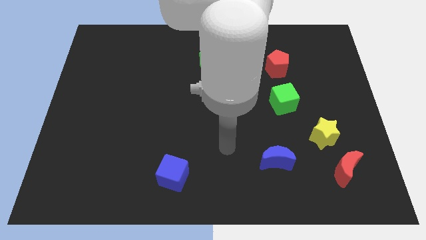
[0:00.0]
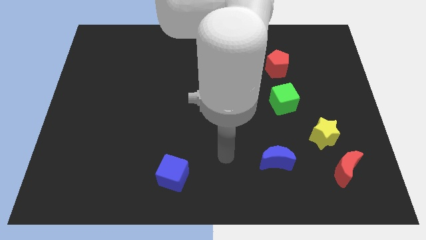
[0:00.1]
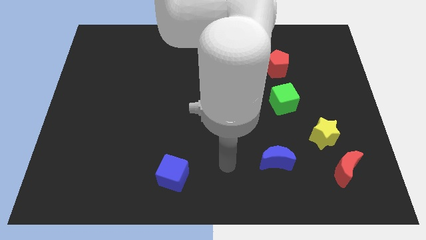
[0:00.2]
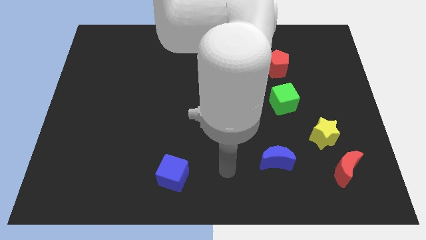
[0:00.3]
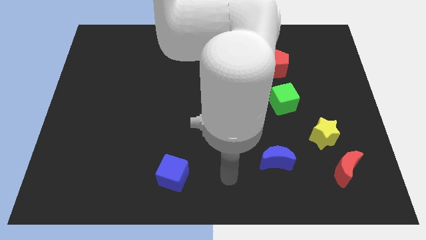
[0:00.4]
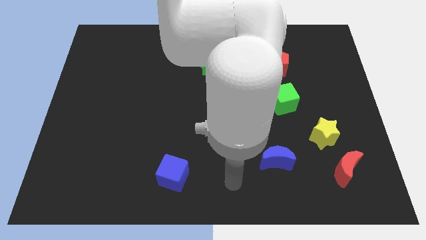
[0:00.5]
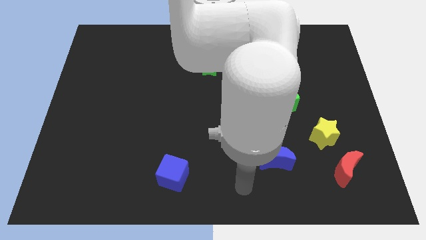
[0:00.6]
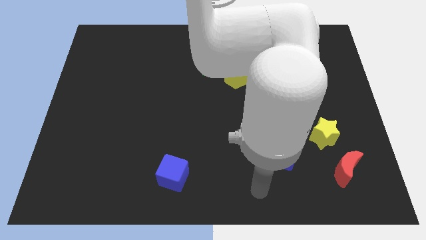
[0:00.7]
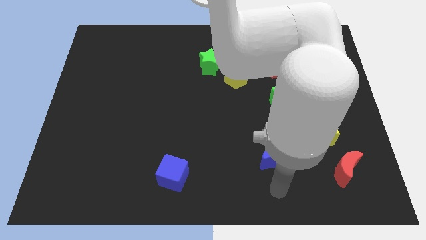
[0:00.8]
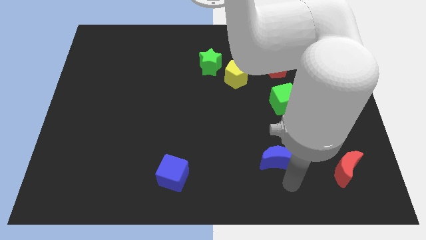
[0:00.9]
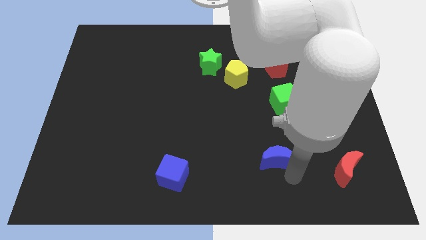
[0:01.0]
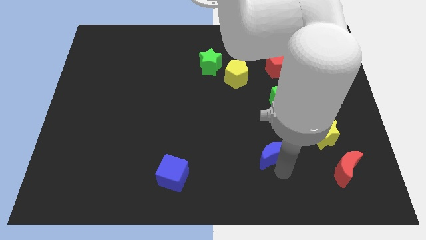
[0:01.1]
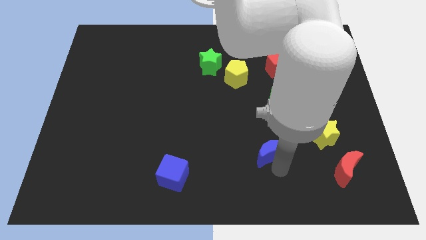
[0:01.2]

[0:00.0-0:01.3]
touch the blue moon

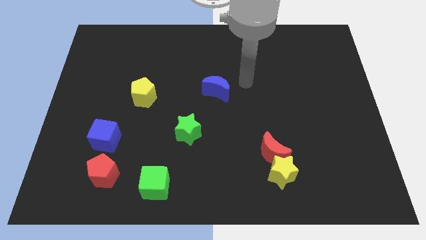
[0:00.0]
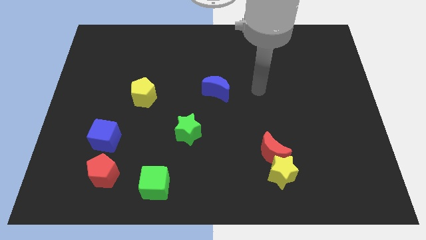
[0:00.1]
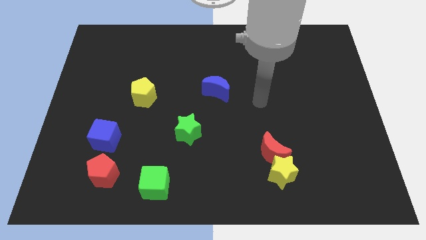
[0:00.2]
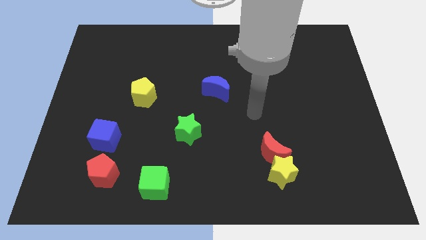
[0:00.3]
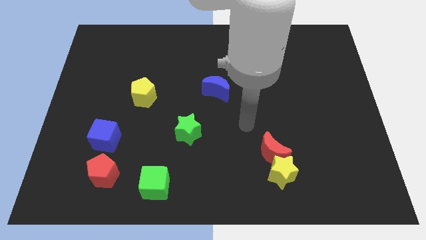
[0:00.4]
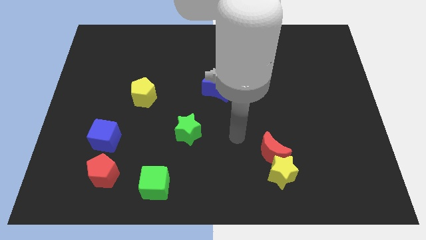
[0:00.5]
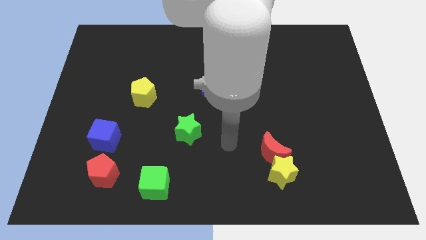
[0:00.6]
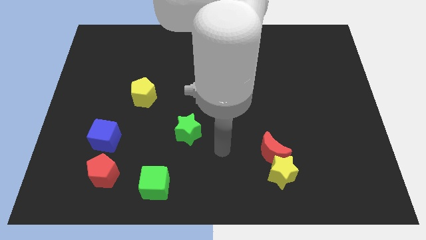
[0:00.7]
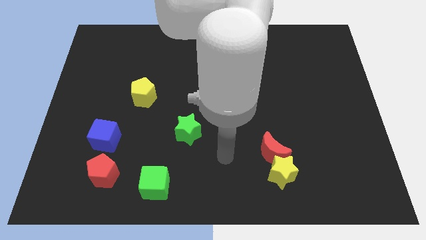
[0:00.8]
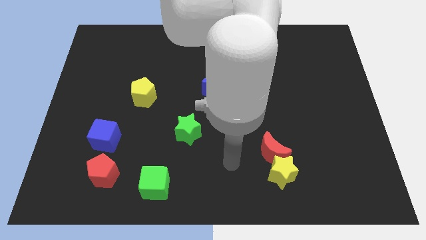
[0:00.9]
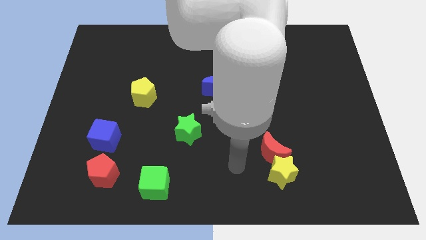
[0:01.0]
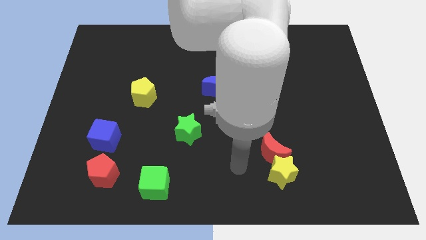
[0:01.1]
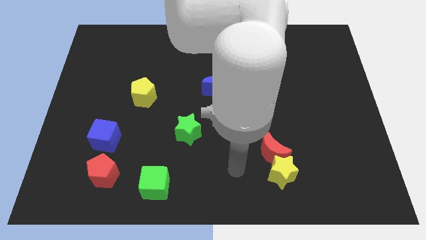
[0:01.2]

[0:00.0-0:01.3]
point your arm at the left side of the yellow star

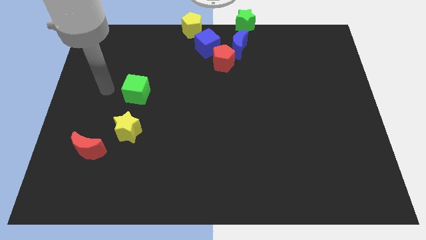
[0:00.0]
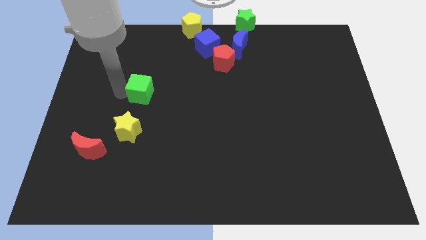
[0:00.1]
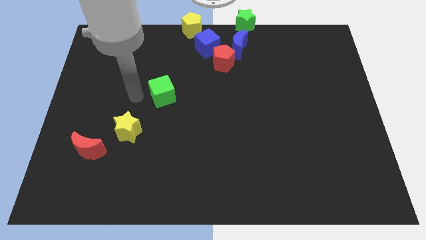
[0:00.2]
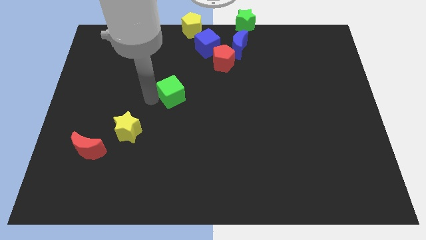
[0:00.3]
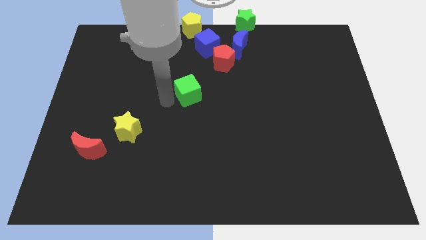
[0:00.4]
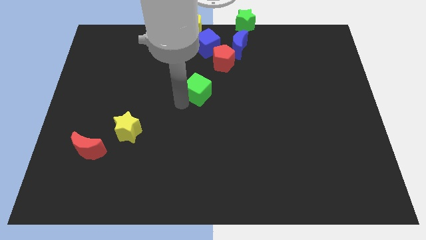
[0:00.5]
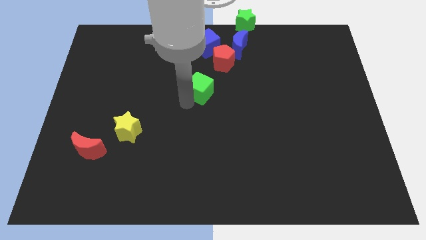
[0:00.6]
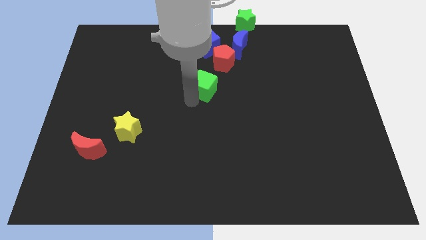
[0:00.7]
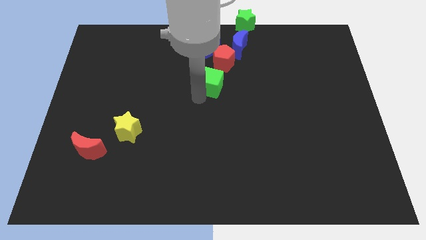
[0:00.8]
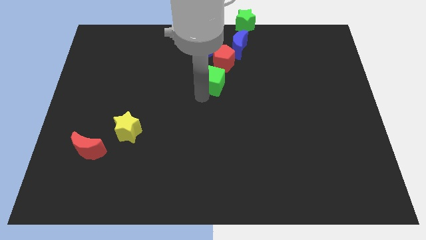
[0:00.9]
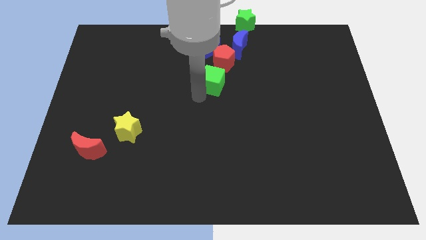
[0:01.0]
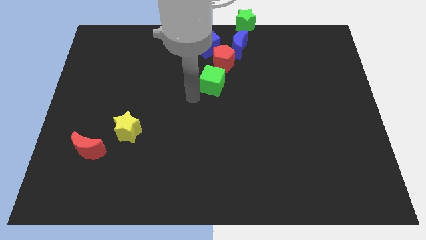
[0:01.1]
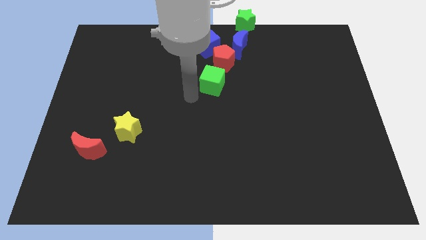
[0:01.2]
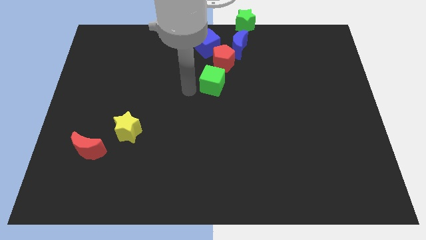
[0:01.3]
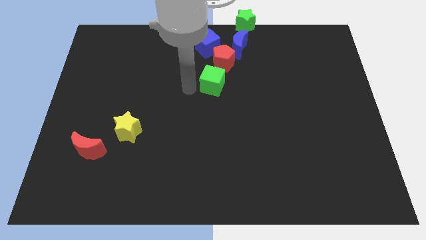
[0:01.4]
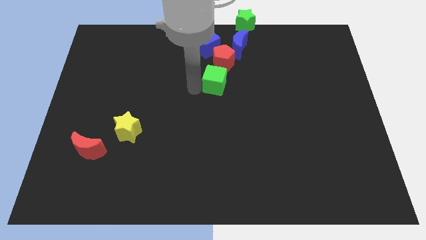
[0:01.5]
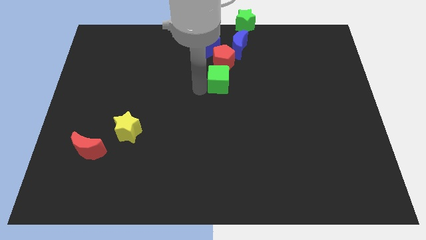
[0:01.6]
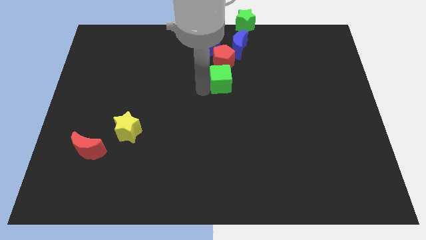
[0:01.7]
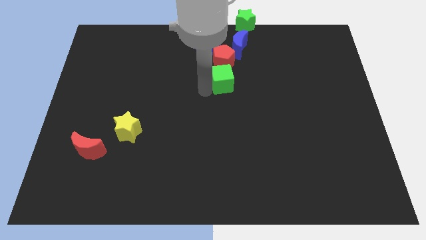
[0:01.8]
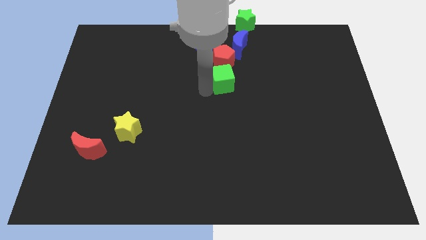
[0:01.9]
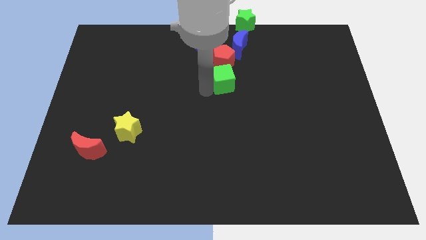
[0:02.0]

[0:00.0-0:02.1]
place green cube below red pentagon

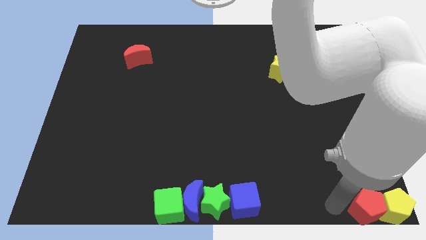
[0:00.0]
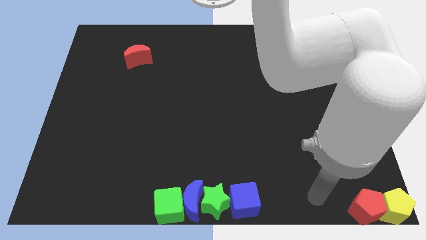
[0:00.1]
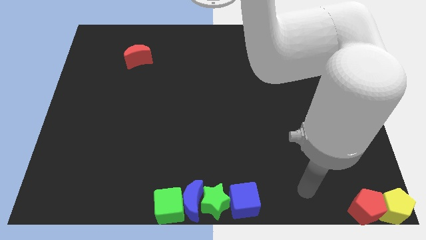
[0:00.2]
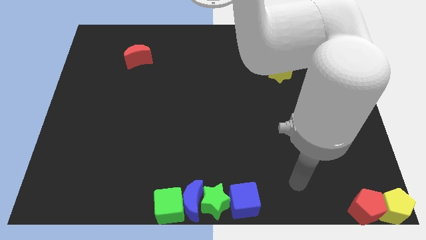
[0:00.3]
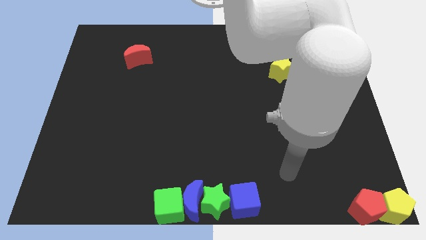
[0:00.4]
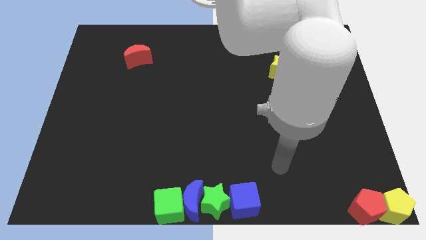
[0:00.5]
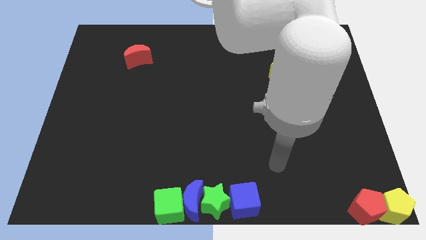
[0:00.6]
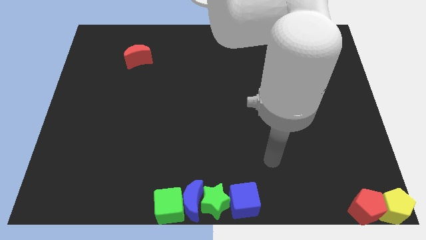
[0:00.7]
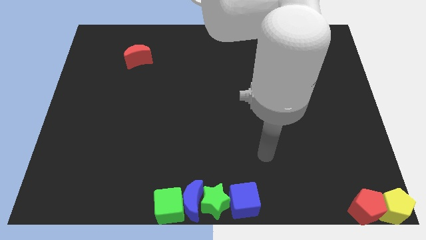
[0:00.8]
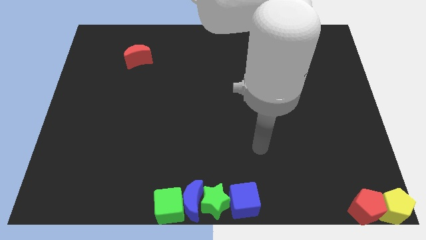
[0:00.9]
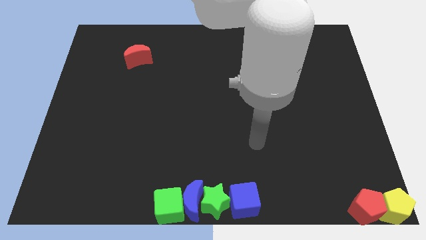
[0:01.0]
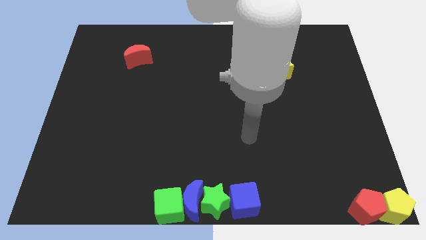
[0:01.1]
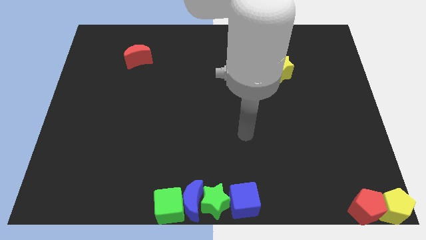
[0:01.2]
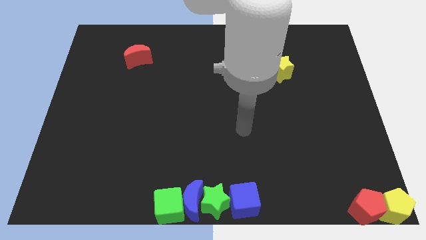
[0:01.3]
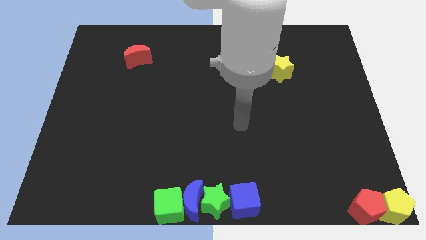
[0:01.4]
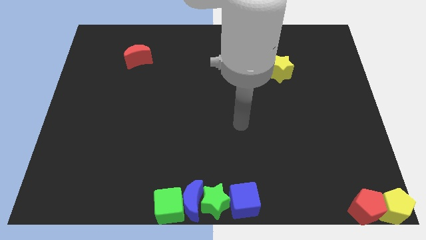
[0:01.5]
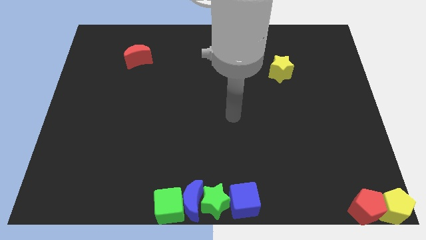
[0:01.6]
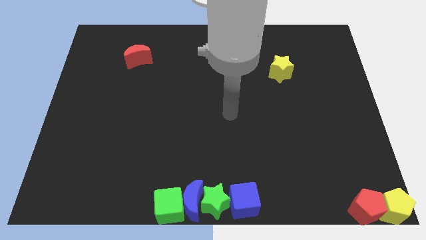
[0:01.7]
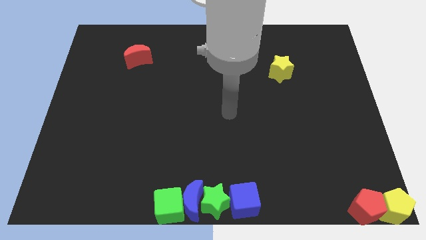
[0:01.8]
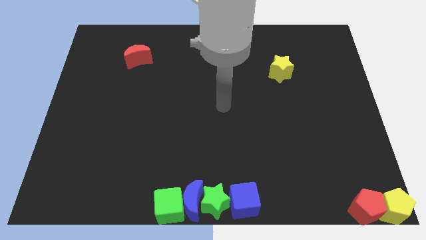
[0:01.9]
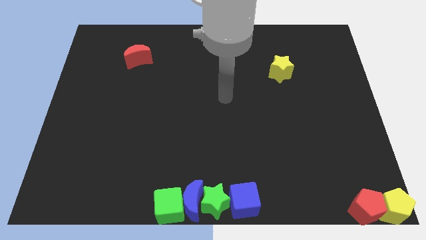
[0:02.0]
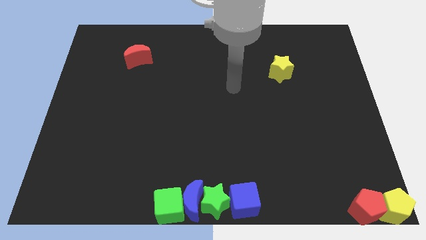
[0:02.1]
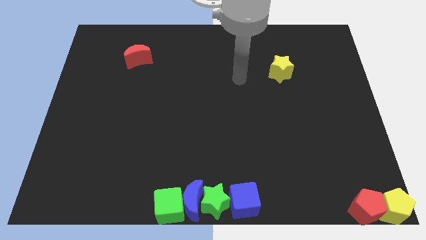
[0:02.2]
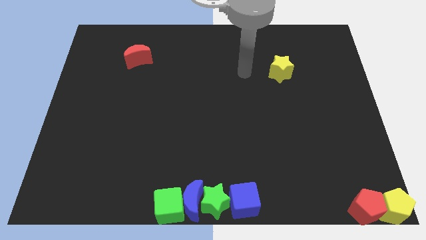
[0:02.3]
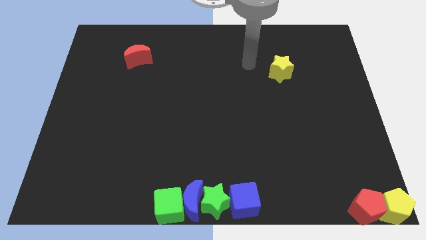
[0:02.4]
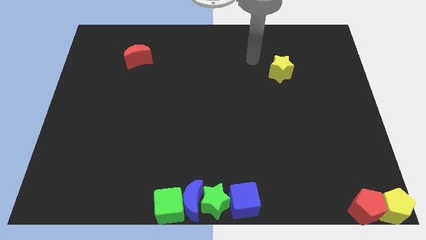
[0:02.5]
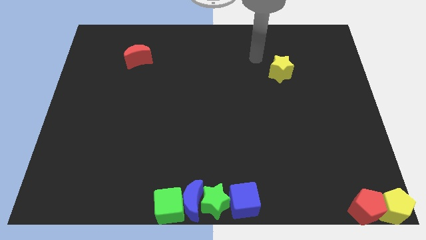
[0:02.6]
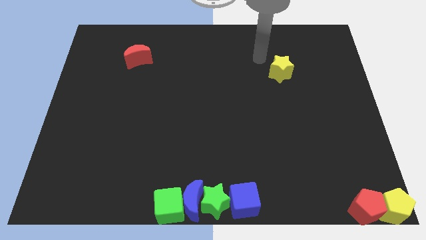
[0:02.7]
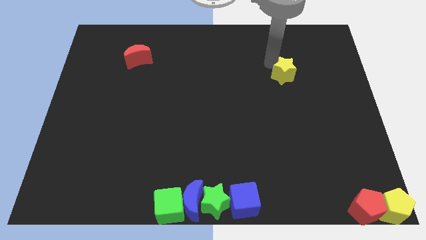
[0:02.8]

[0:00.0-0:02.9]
point your arm to the top left of the yellow star

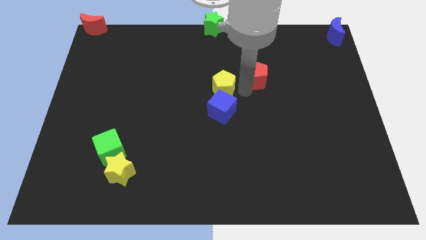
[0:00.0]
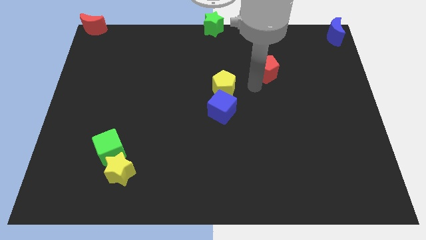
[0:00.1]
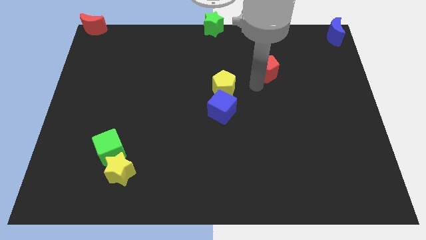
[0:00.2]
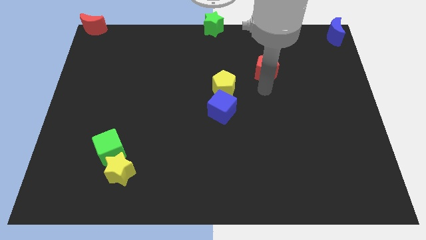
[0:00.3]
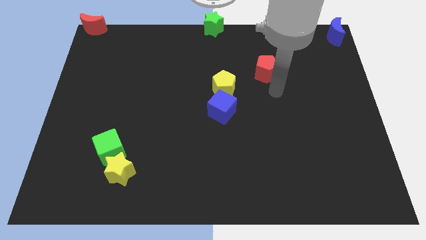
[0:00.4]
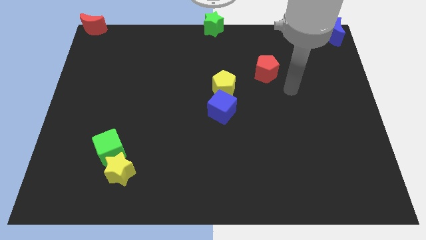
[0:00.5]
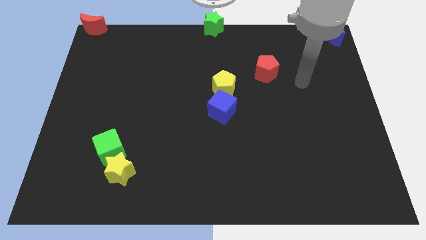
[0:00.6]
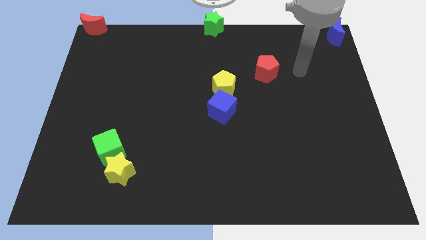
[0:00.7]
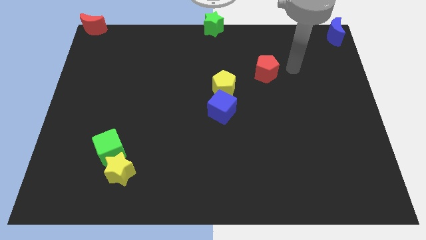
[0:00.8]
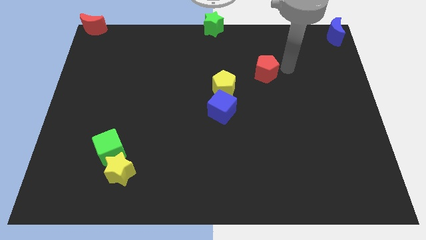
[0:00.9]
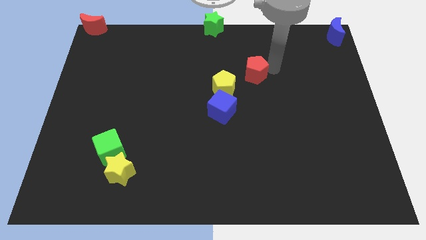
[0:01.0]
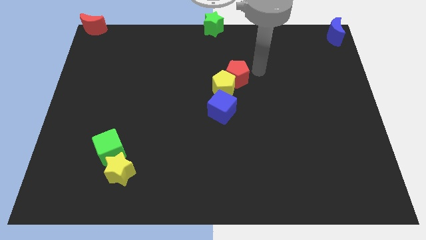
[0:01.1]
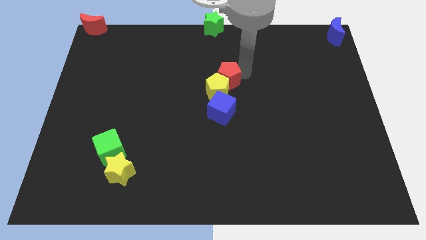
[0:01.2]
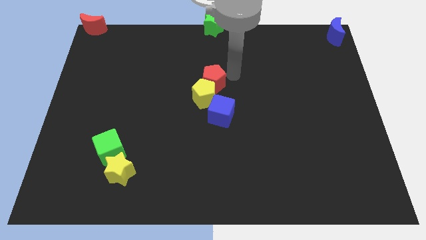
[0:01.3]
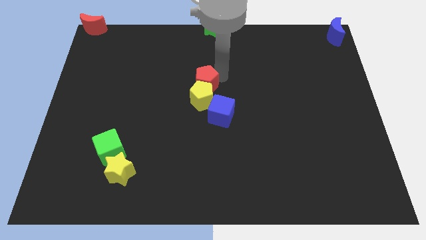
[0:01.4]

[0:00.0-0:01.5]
place the red pentagon above the yellow pentagon
